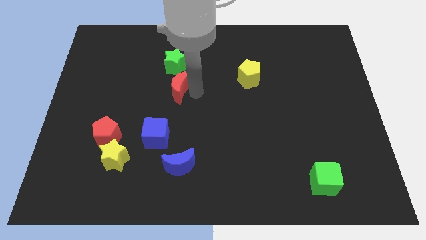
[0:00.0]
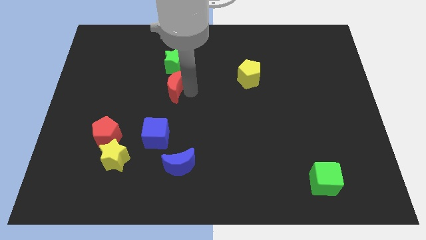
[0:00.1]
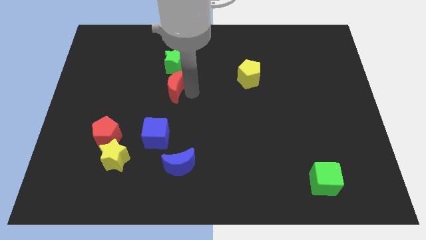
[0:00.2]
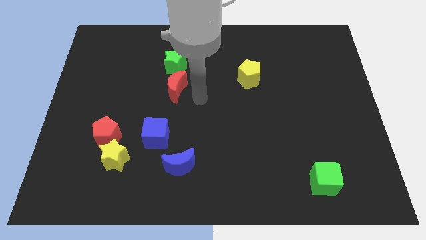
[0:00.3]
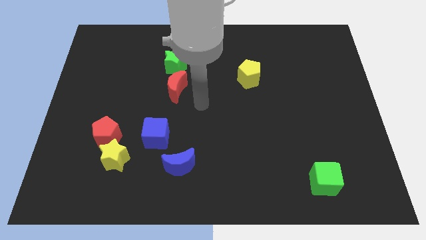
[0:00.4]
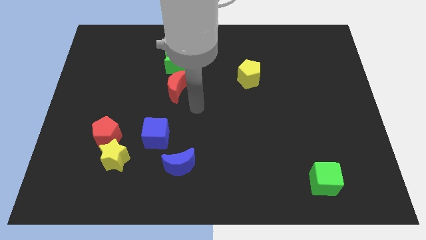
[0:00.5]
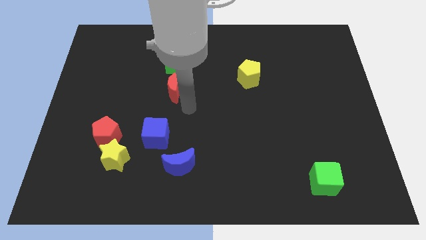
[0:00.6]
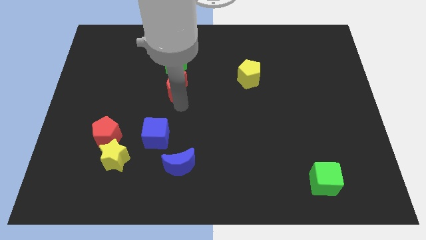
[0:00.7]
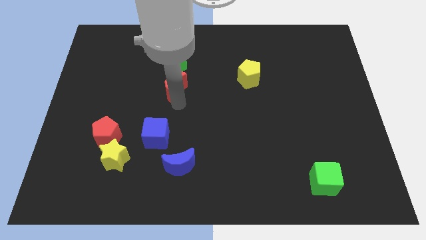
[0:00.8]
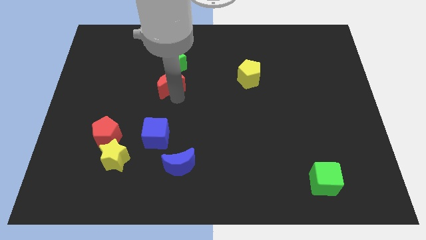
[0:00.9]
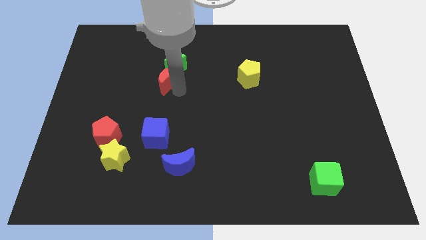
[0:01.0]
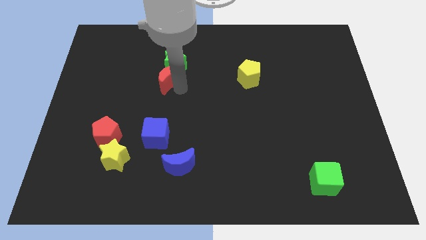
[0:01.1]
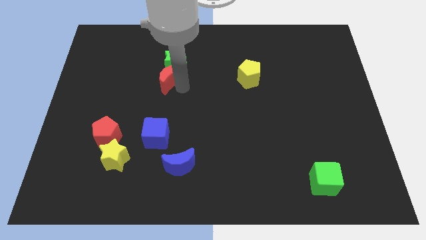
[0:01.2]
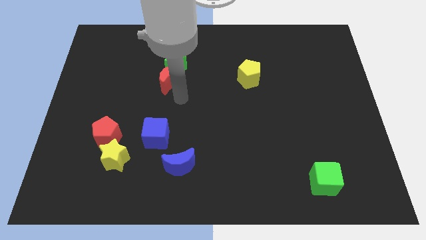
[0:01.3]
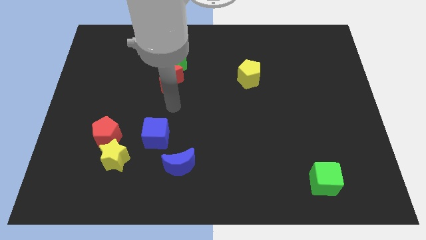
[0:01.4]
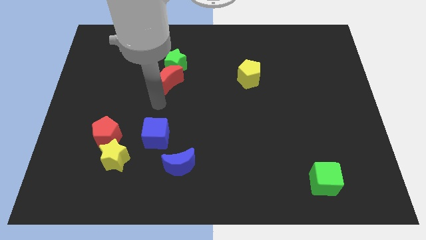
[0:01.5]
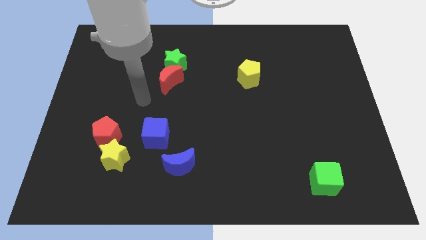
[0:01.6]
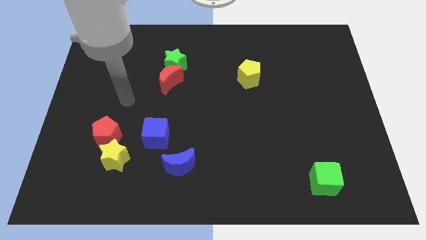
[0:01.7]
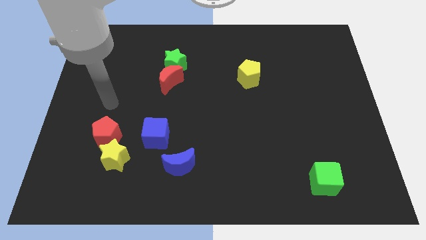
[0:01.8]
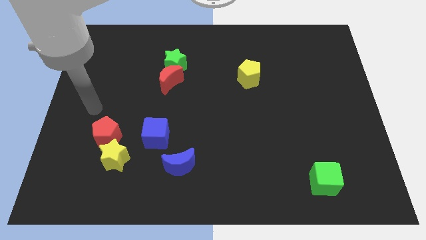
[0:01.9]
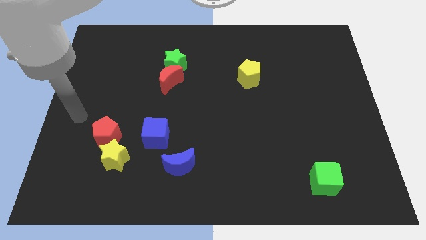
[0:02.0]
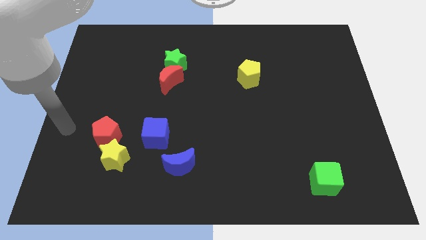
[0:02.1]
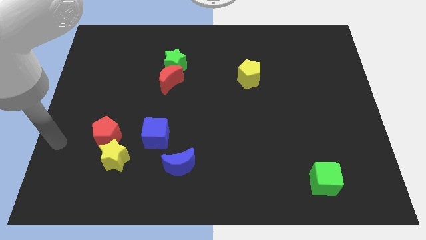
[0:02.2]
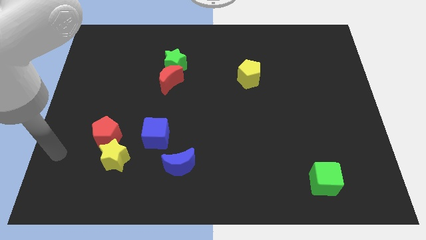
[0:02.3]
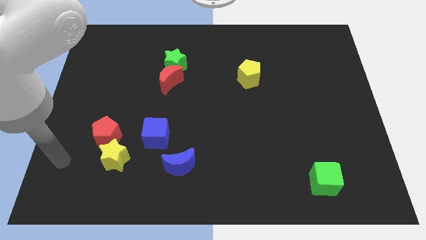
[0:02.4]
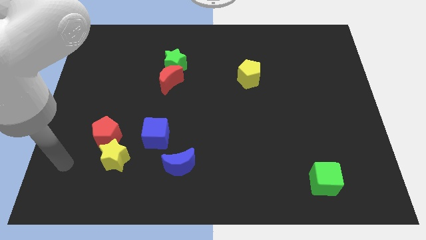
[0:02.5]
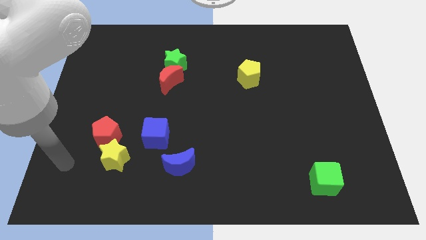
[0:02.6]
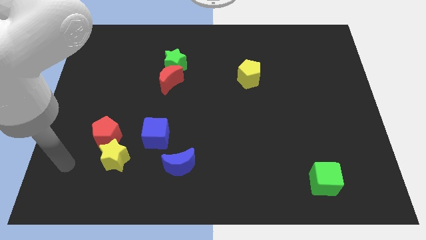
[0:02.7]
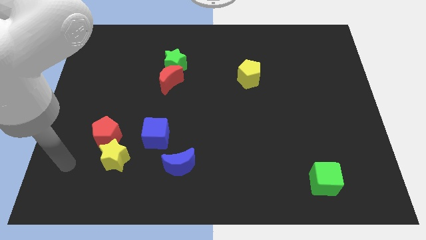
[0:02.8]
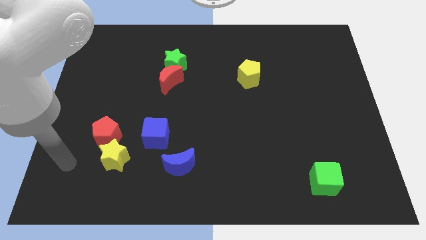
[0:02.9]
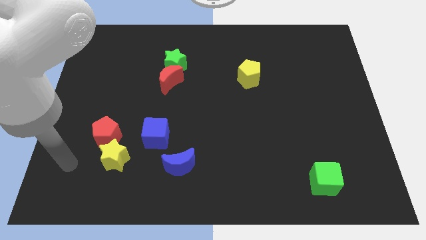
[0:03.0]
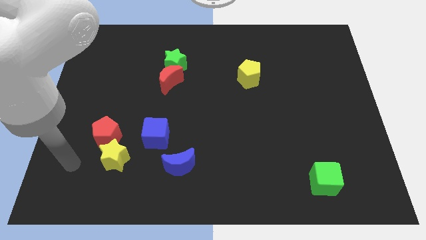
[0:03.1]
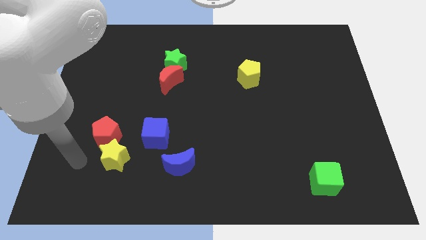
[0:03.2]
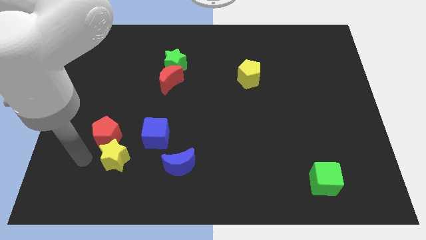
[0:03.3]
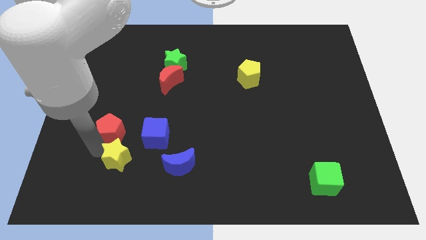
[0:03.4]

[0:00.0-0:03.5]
touch the bottom left of the red pentagon

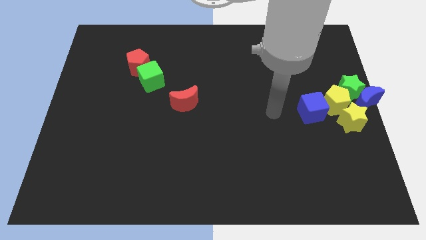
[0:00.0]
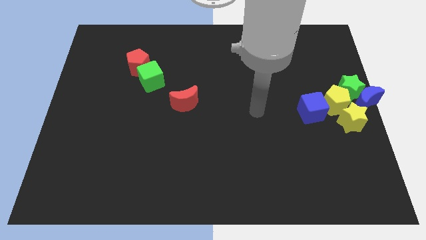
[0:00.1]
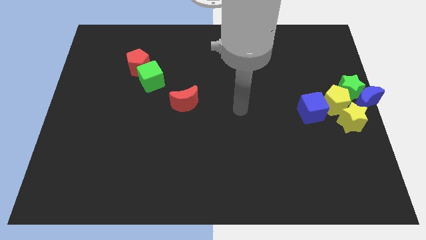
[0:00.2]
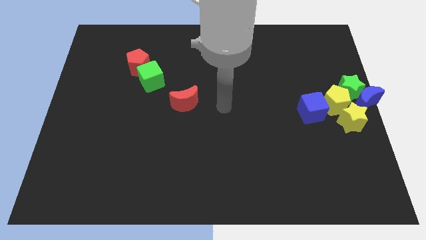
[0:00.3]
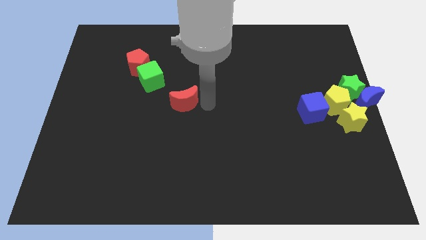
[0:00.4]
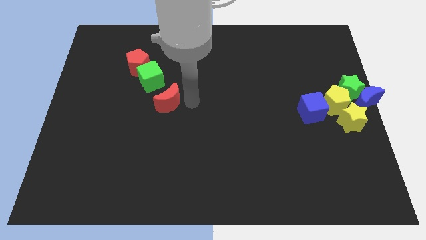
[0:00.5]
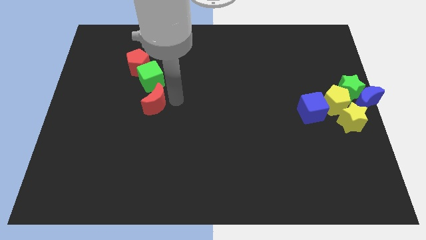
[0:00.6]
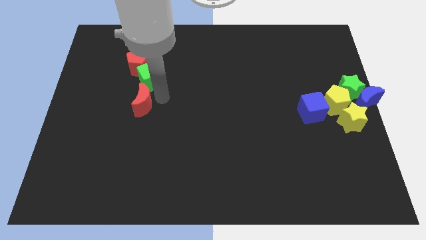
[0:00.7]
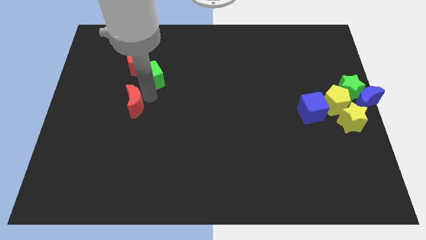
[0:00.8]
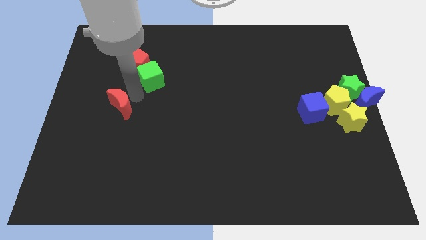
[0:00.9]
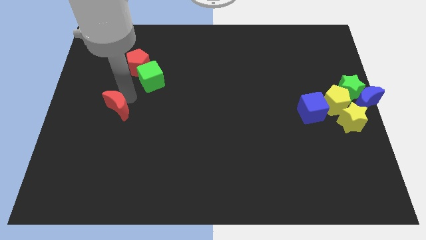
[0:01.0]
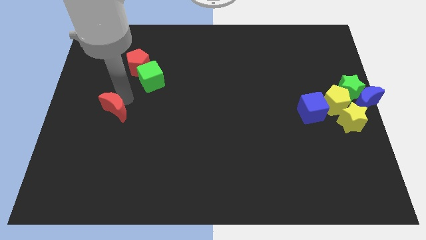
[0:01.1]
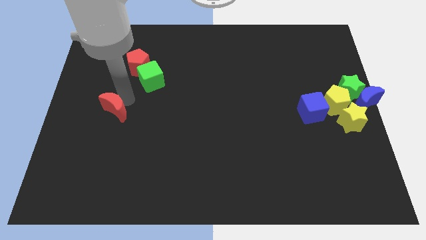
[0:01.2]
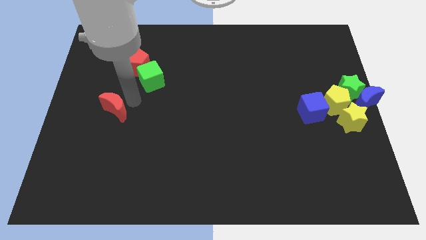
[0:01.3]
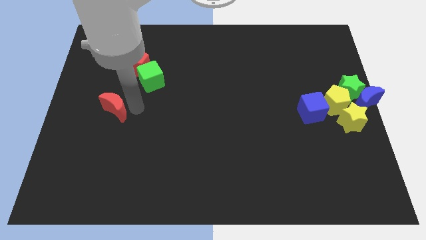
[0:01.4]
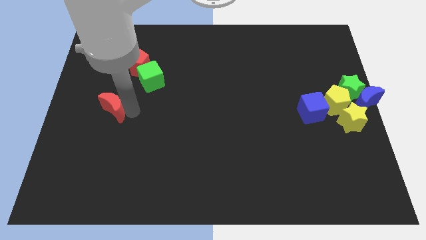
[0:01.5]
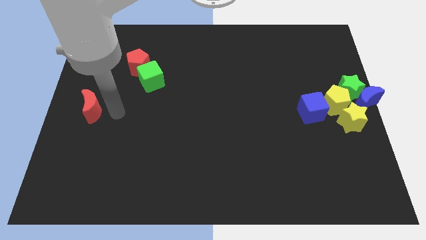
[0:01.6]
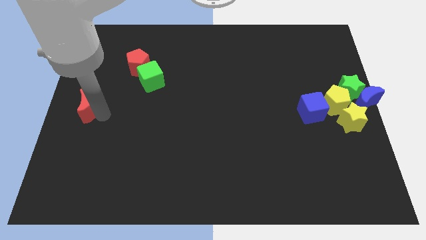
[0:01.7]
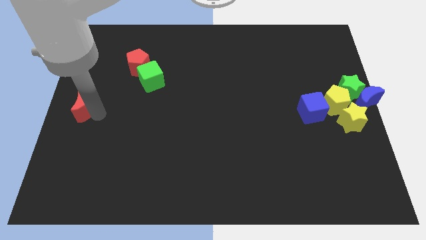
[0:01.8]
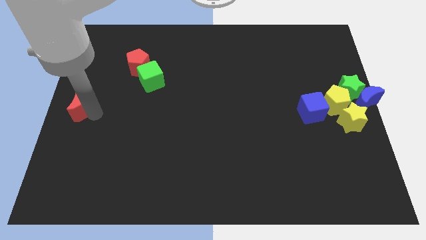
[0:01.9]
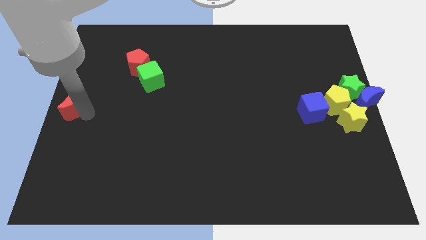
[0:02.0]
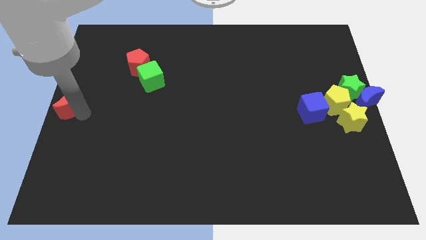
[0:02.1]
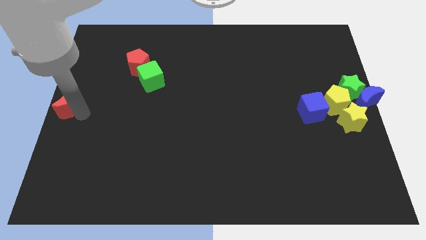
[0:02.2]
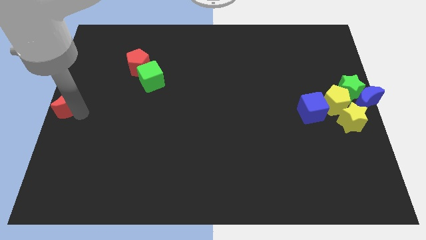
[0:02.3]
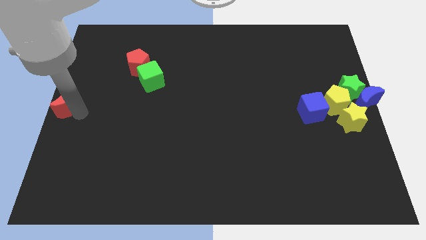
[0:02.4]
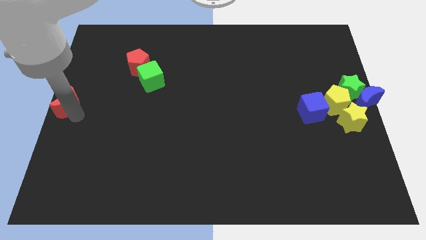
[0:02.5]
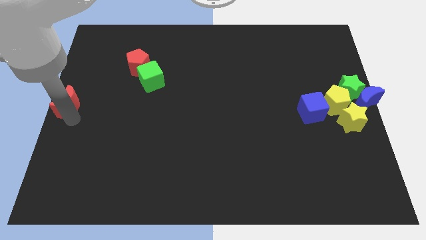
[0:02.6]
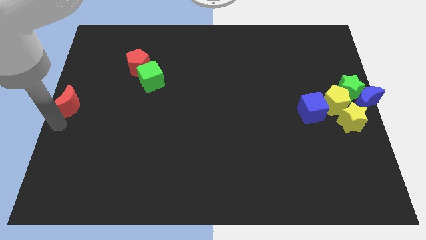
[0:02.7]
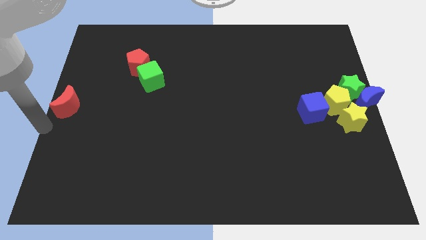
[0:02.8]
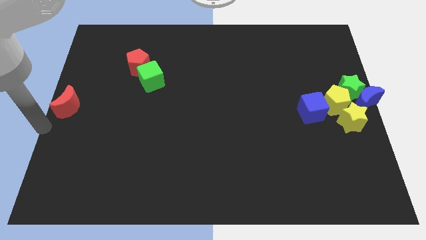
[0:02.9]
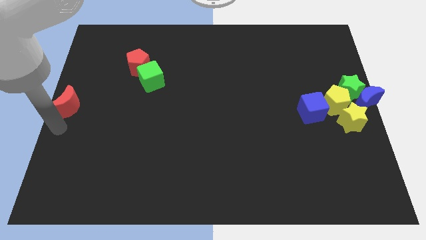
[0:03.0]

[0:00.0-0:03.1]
drag red crescent towards center left of the board

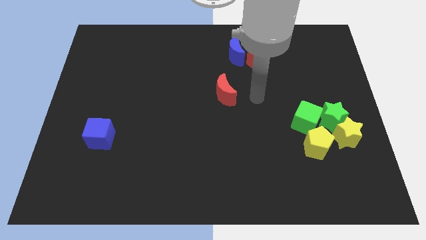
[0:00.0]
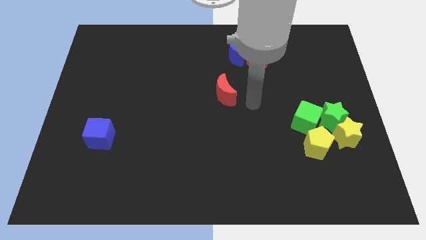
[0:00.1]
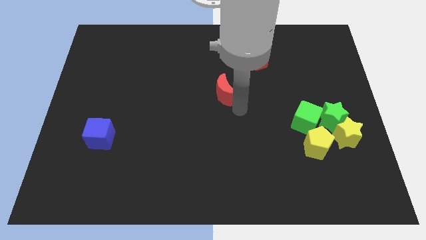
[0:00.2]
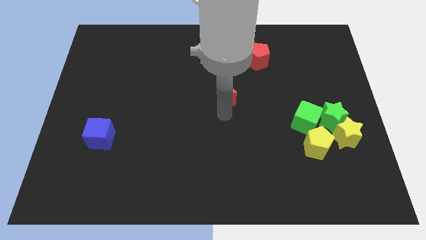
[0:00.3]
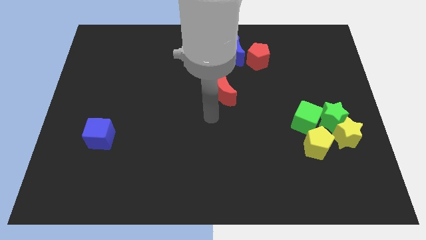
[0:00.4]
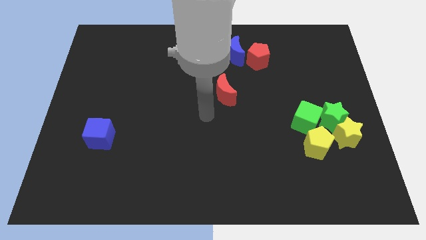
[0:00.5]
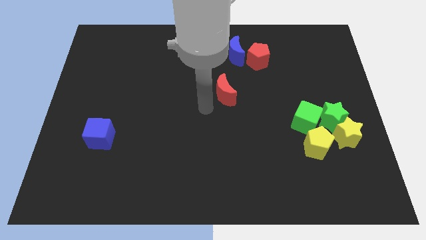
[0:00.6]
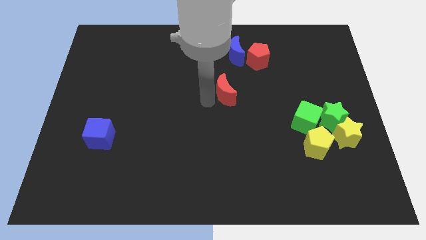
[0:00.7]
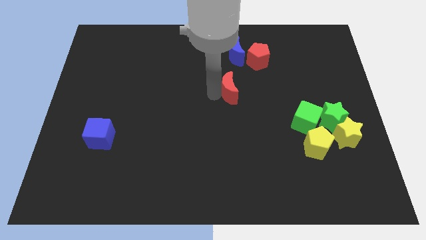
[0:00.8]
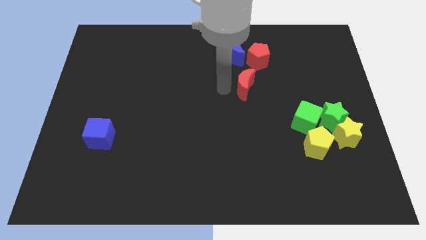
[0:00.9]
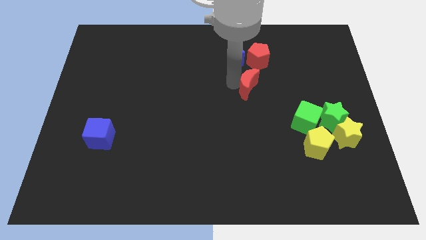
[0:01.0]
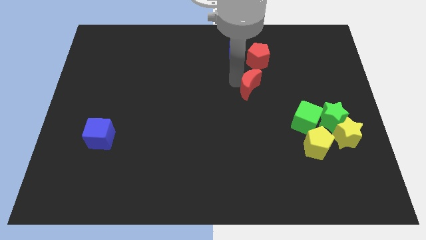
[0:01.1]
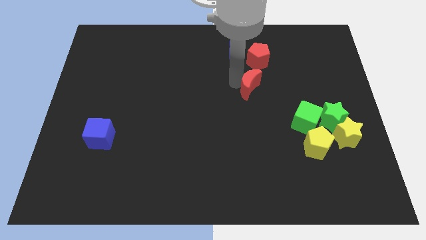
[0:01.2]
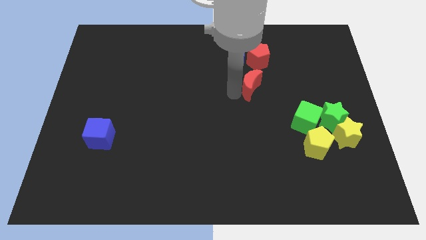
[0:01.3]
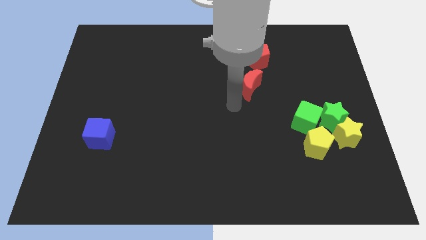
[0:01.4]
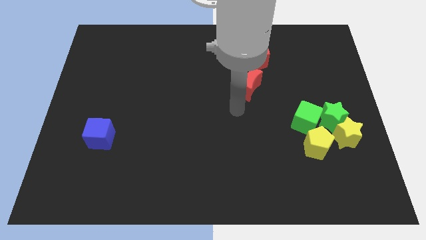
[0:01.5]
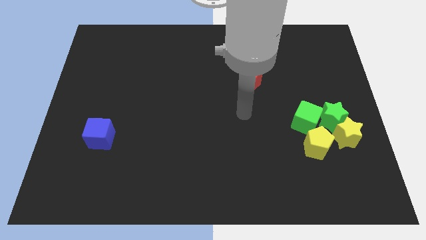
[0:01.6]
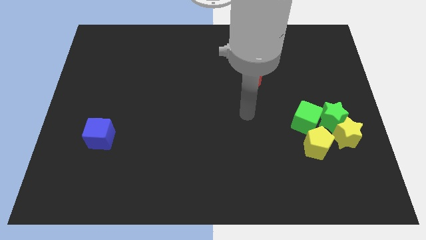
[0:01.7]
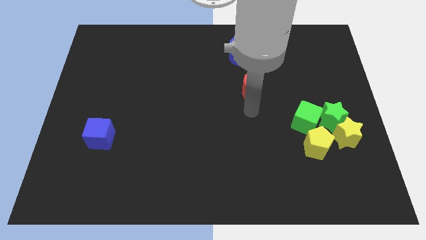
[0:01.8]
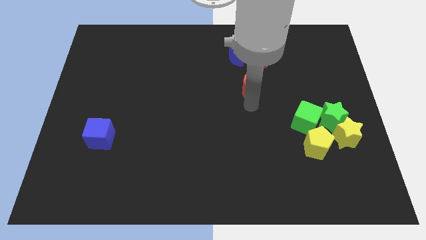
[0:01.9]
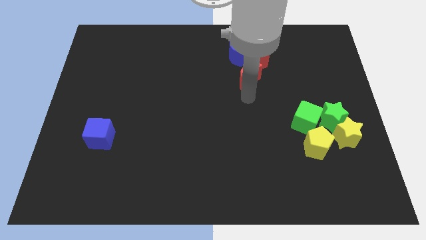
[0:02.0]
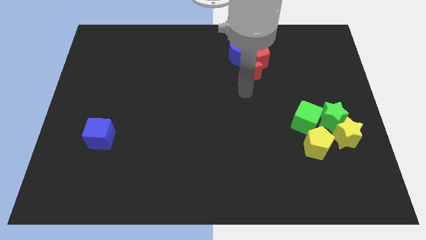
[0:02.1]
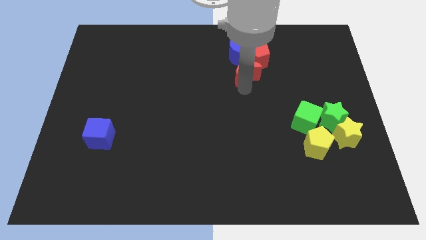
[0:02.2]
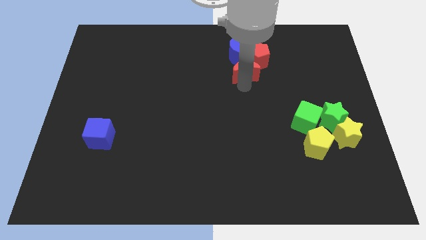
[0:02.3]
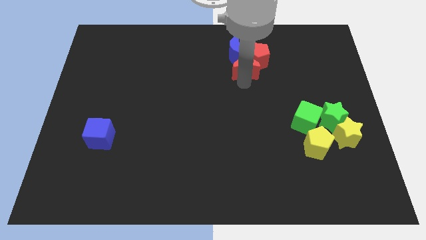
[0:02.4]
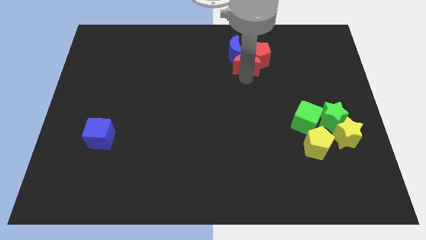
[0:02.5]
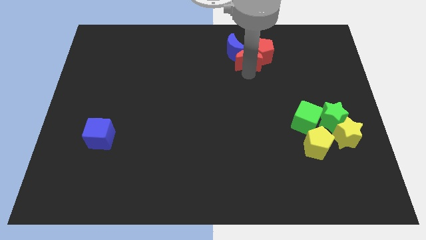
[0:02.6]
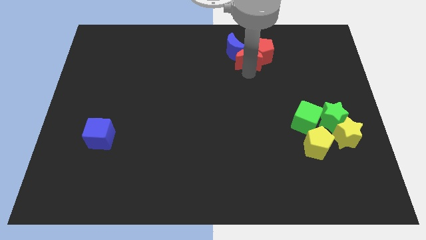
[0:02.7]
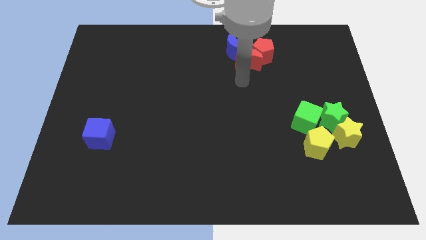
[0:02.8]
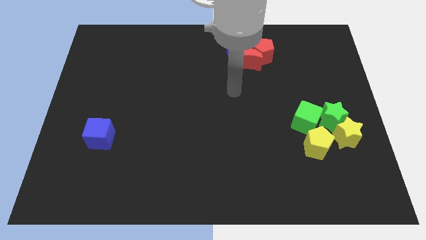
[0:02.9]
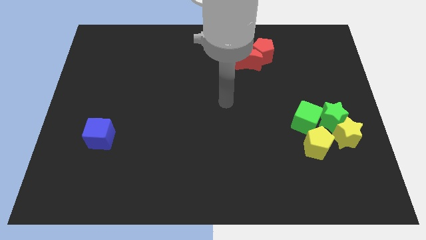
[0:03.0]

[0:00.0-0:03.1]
move the red crescent below the red penatgon
